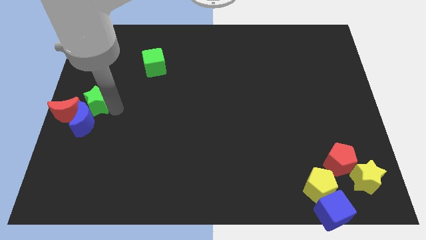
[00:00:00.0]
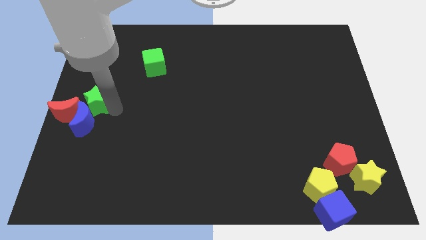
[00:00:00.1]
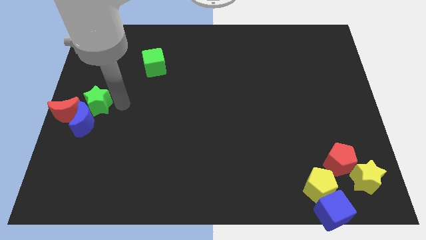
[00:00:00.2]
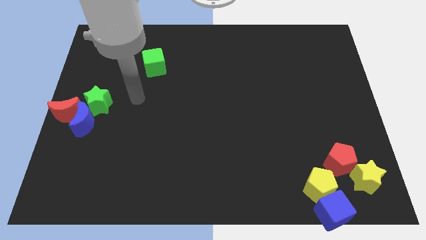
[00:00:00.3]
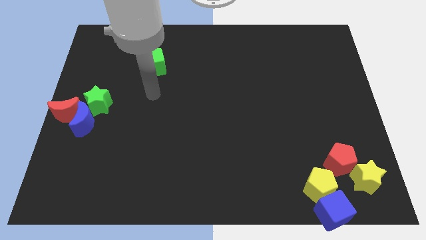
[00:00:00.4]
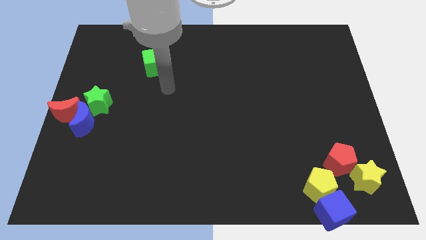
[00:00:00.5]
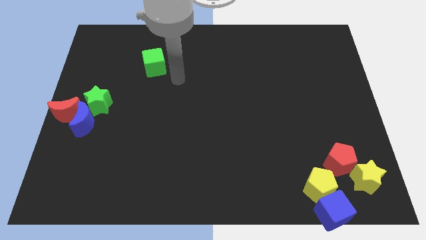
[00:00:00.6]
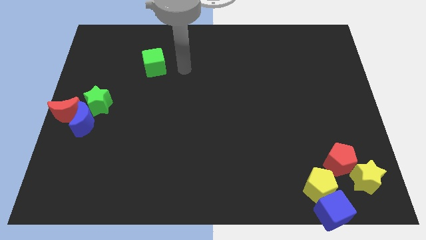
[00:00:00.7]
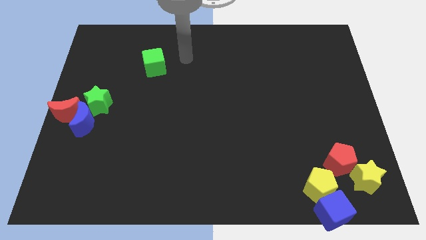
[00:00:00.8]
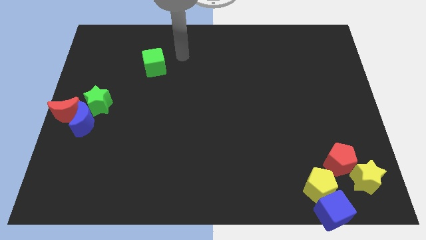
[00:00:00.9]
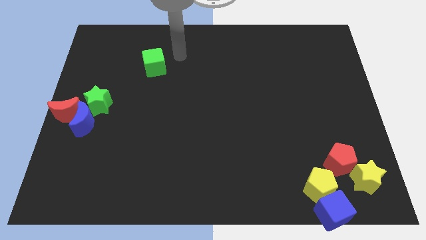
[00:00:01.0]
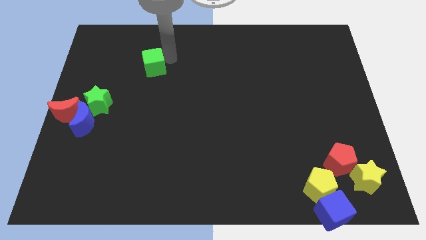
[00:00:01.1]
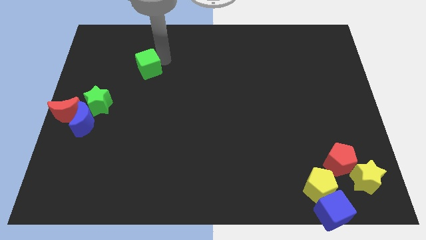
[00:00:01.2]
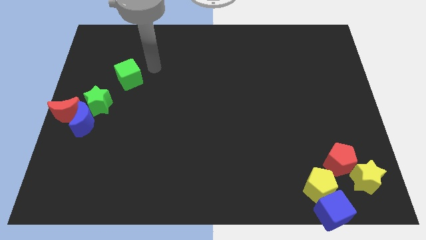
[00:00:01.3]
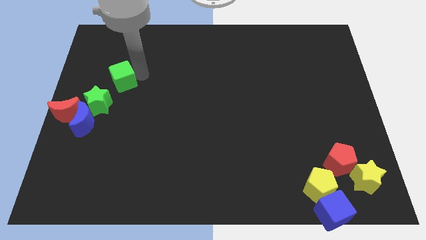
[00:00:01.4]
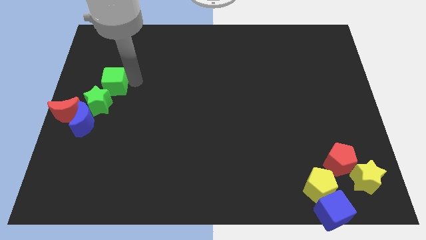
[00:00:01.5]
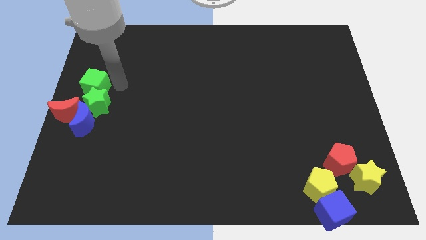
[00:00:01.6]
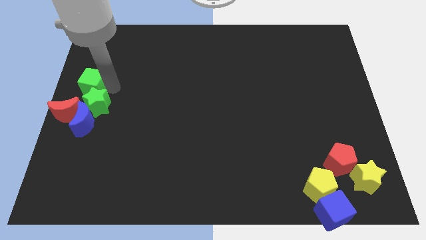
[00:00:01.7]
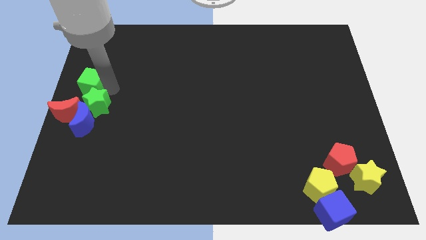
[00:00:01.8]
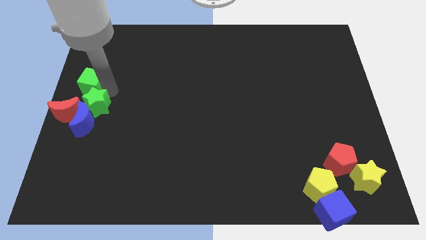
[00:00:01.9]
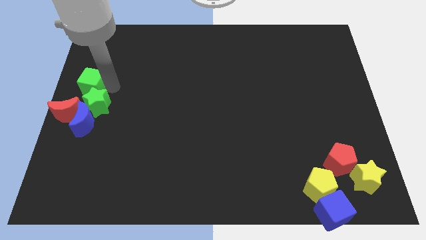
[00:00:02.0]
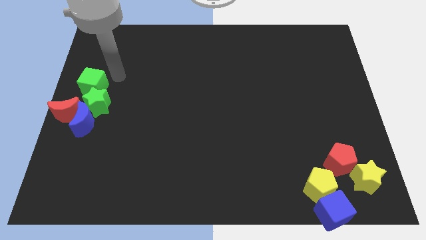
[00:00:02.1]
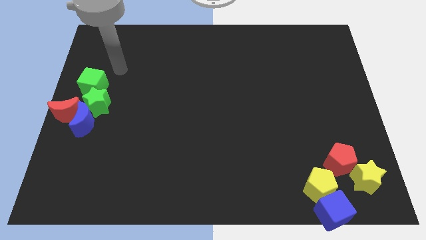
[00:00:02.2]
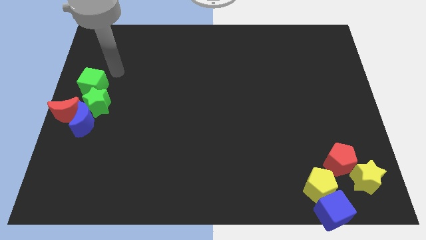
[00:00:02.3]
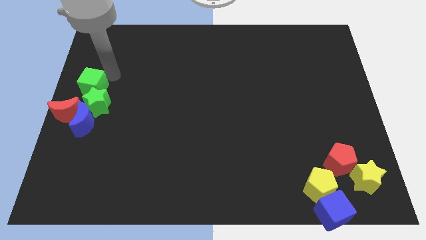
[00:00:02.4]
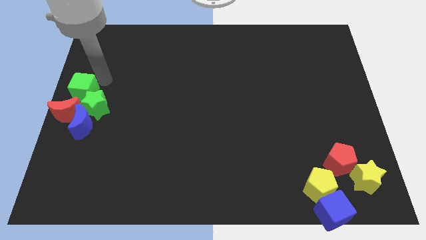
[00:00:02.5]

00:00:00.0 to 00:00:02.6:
push the green cube into a green star

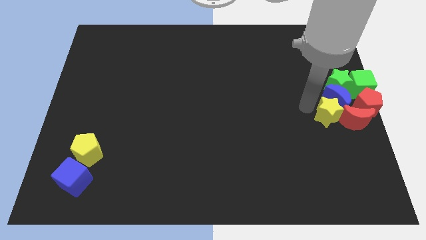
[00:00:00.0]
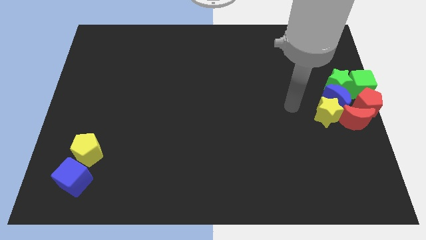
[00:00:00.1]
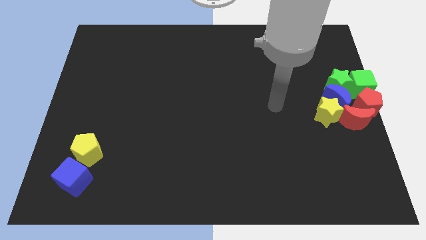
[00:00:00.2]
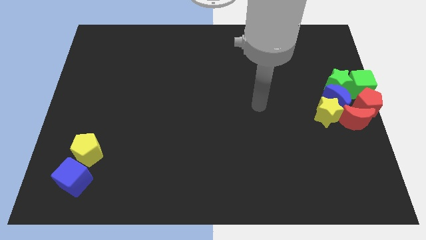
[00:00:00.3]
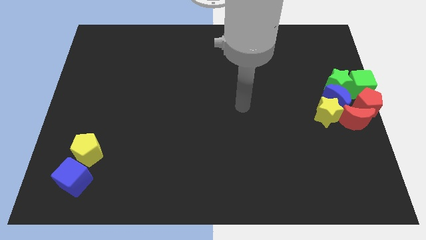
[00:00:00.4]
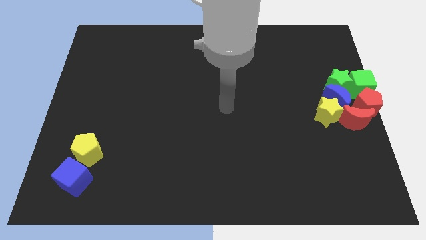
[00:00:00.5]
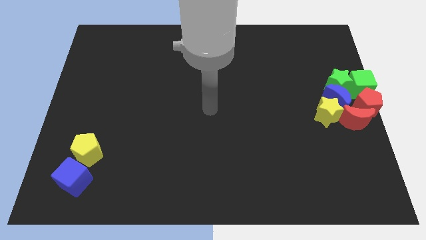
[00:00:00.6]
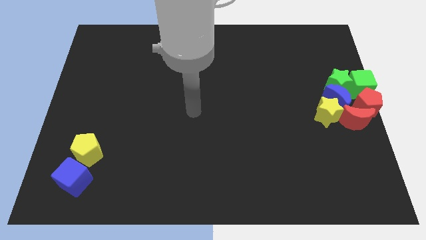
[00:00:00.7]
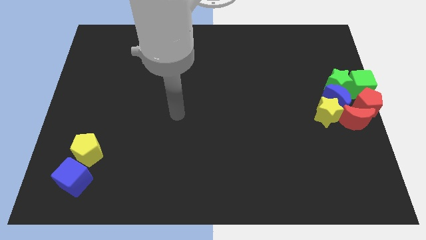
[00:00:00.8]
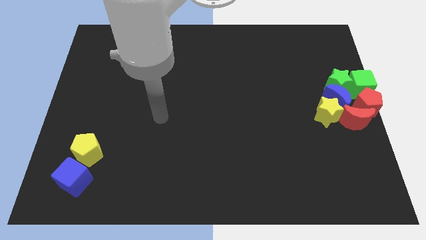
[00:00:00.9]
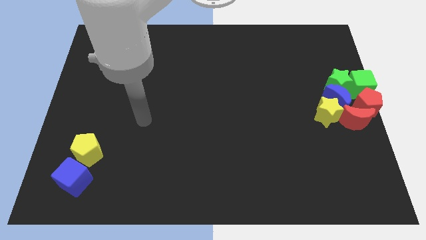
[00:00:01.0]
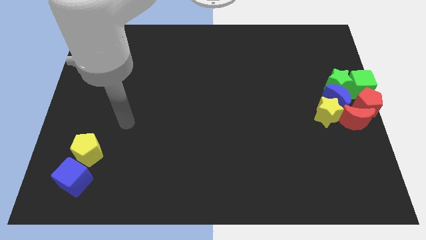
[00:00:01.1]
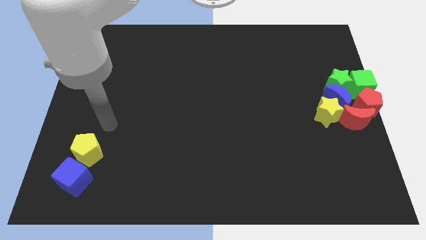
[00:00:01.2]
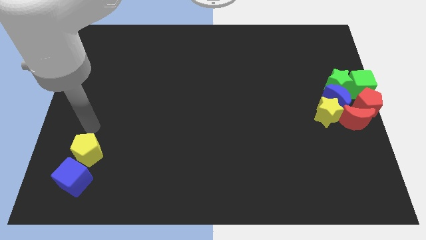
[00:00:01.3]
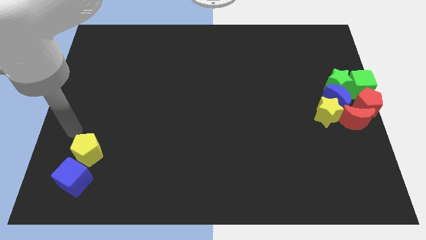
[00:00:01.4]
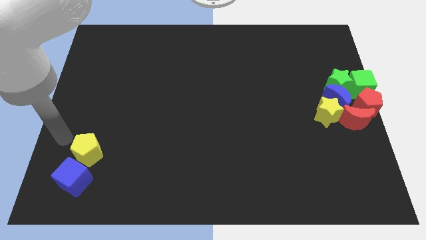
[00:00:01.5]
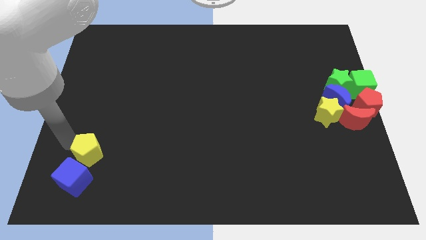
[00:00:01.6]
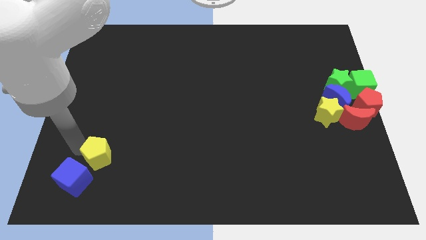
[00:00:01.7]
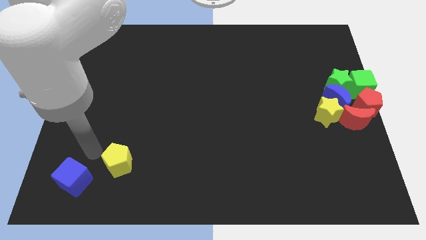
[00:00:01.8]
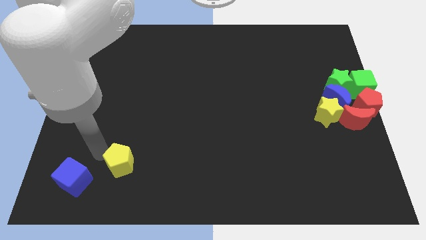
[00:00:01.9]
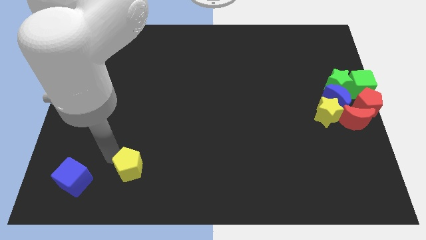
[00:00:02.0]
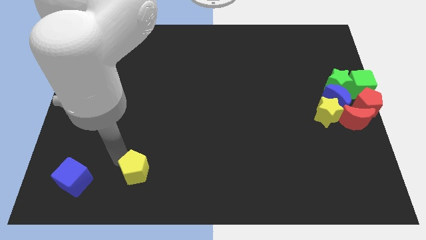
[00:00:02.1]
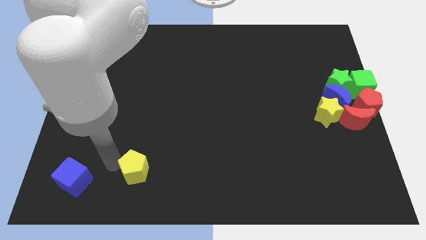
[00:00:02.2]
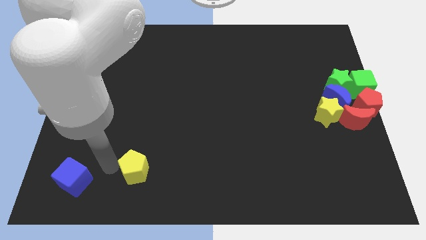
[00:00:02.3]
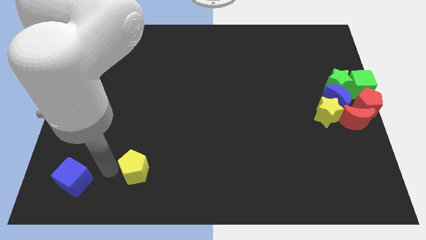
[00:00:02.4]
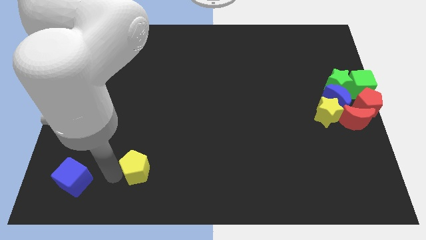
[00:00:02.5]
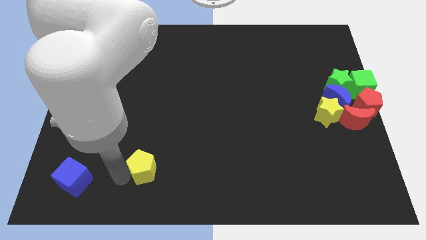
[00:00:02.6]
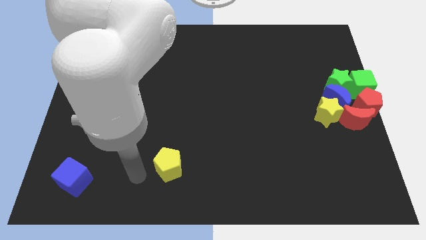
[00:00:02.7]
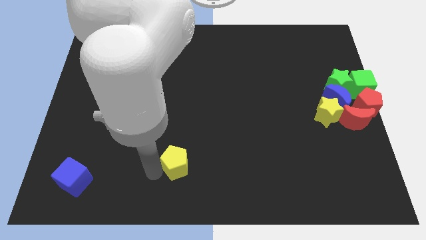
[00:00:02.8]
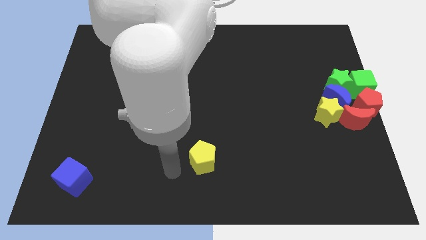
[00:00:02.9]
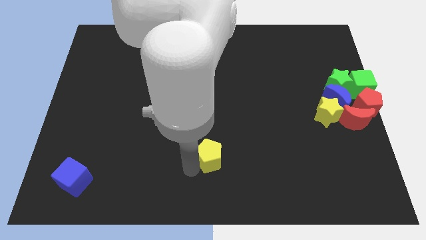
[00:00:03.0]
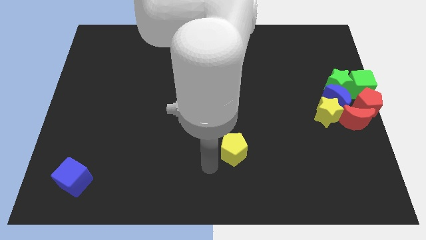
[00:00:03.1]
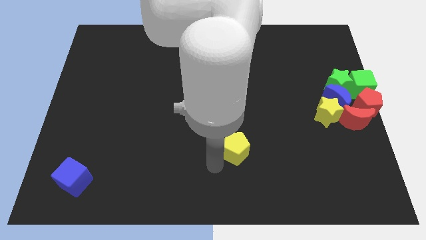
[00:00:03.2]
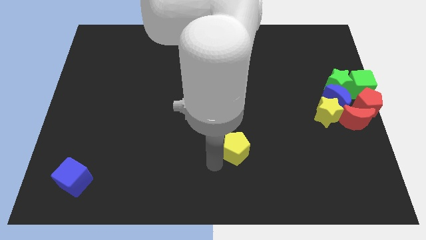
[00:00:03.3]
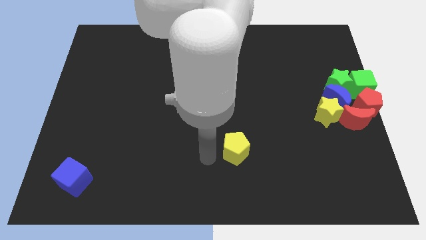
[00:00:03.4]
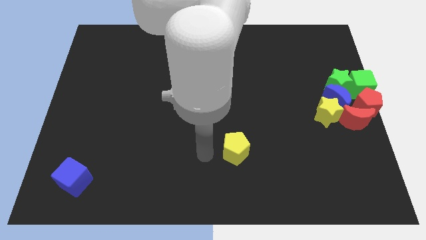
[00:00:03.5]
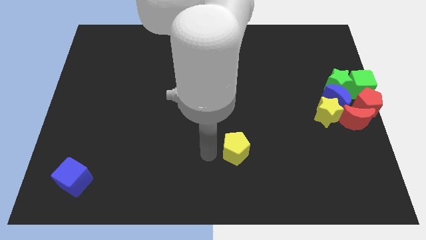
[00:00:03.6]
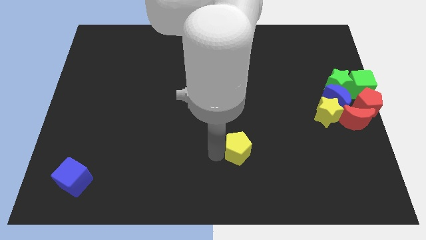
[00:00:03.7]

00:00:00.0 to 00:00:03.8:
move your arm away from the yellow star

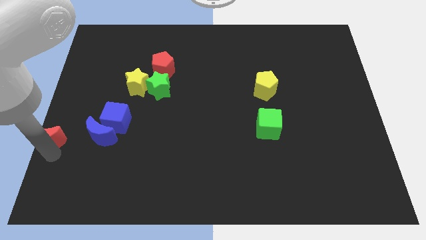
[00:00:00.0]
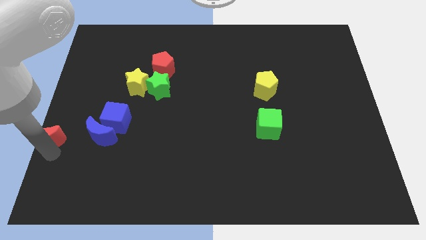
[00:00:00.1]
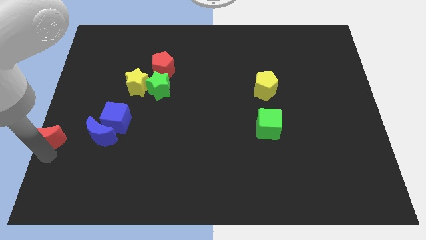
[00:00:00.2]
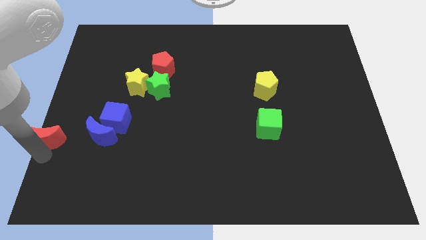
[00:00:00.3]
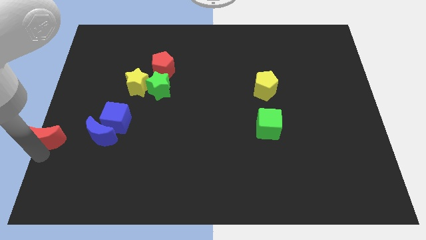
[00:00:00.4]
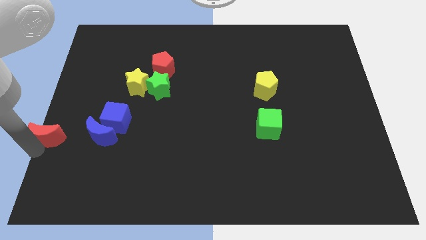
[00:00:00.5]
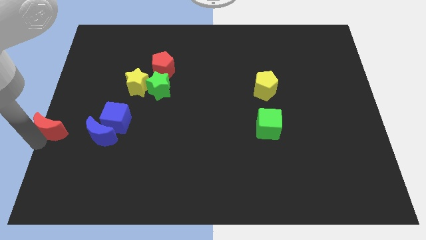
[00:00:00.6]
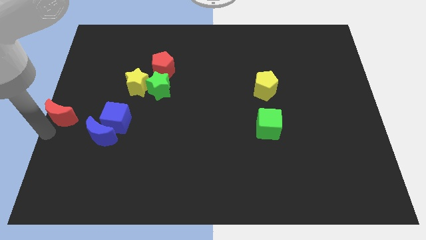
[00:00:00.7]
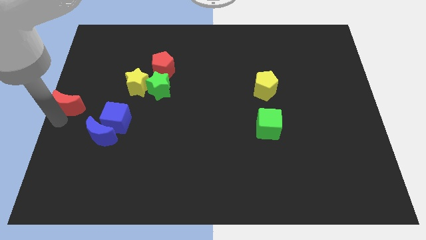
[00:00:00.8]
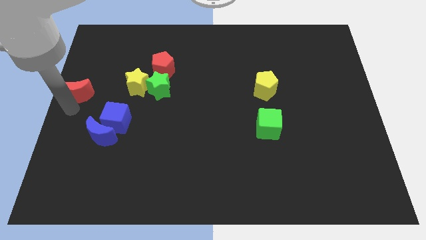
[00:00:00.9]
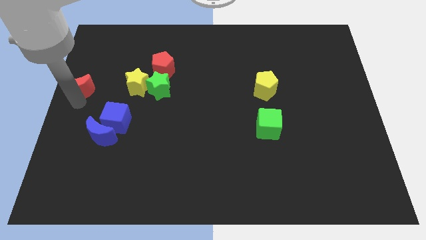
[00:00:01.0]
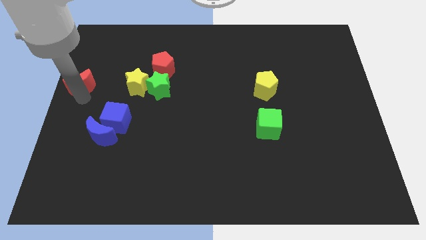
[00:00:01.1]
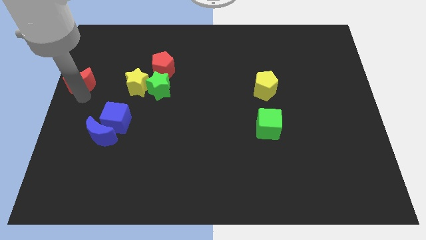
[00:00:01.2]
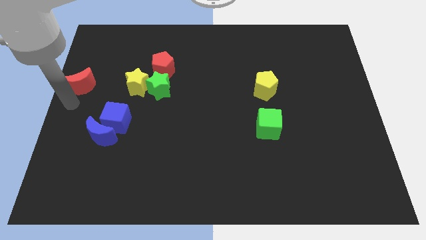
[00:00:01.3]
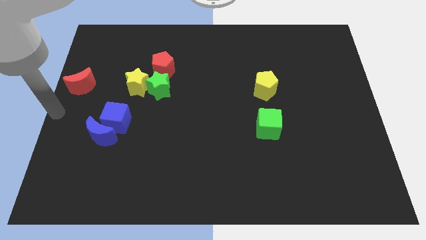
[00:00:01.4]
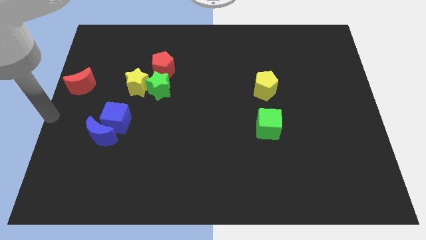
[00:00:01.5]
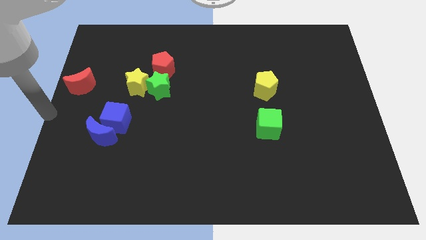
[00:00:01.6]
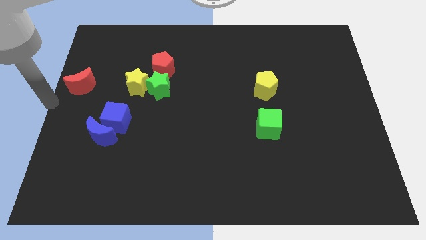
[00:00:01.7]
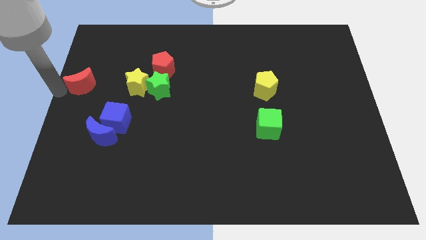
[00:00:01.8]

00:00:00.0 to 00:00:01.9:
move the red moon to the left of yellow star

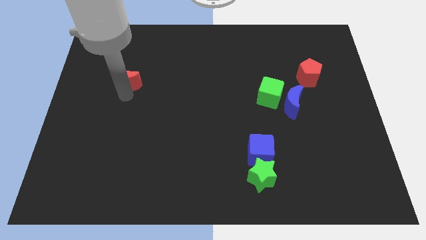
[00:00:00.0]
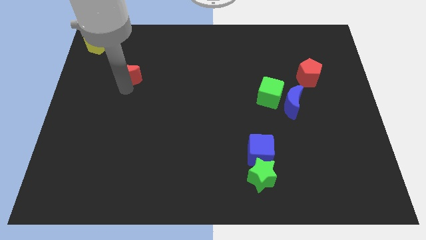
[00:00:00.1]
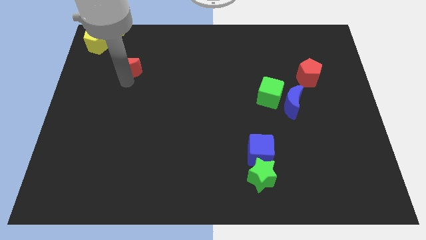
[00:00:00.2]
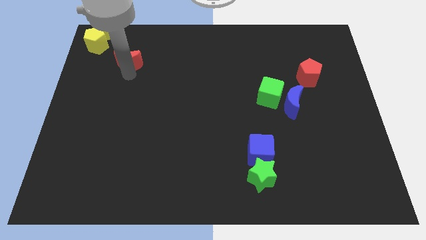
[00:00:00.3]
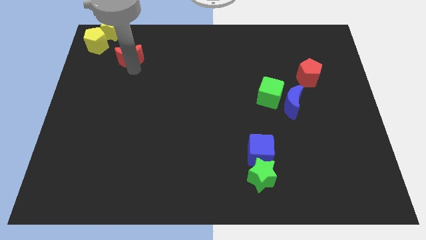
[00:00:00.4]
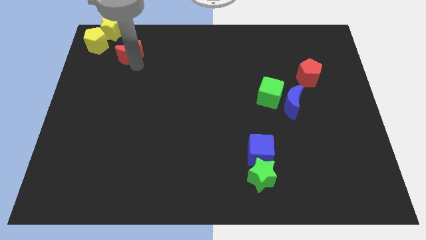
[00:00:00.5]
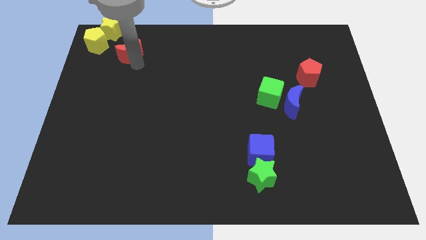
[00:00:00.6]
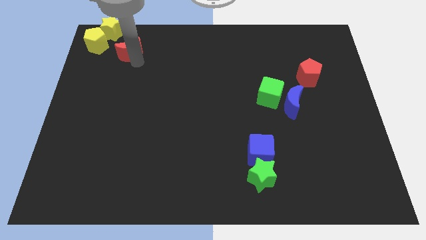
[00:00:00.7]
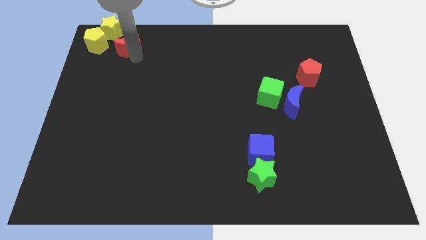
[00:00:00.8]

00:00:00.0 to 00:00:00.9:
place the red moon right to the yellow pentagon
